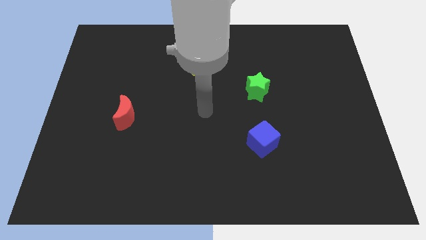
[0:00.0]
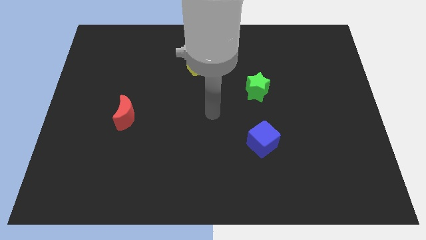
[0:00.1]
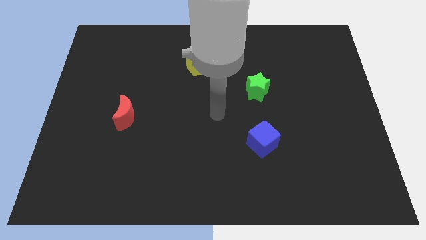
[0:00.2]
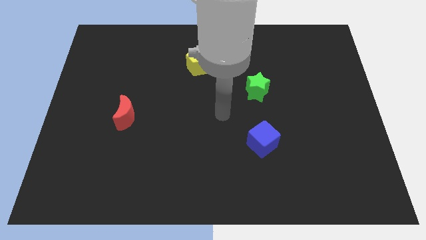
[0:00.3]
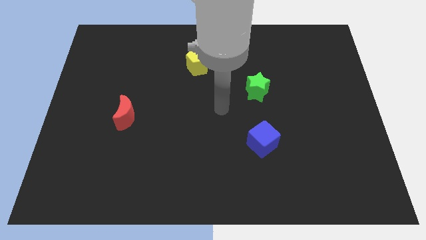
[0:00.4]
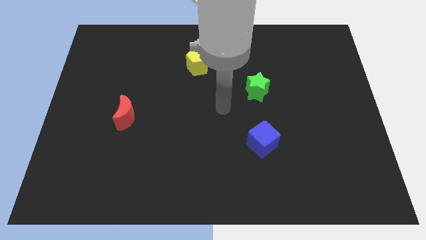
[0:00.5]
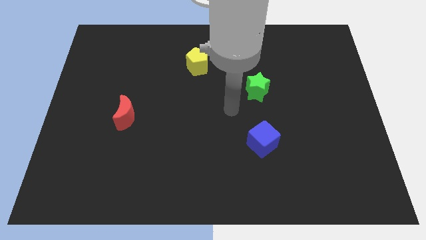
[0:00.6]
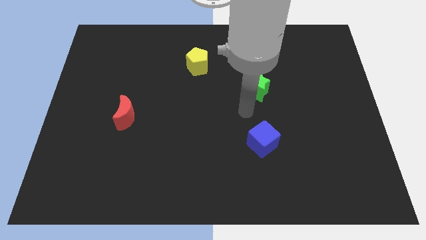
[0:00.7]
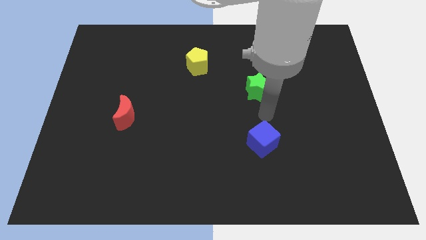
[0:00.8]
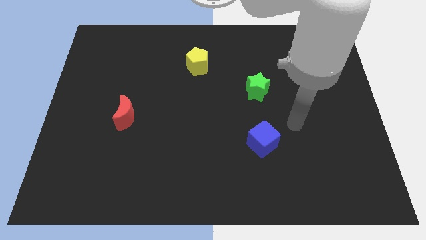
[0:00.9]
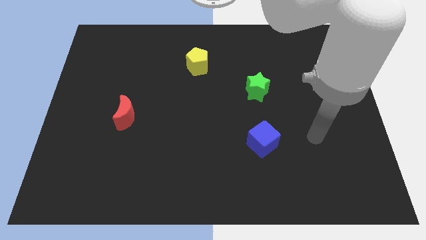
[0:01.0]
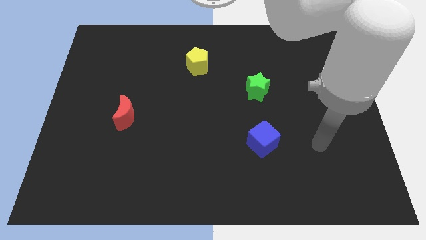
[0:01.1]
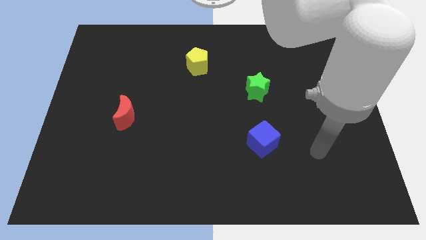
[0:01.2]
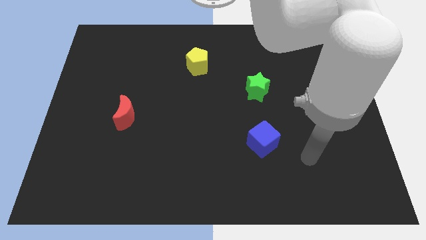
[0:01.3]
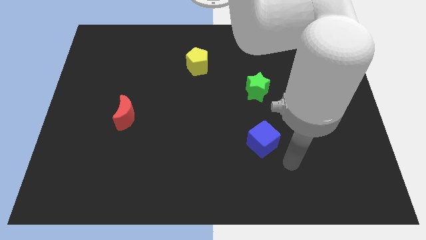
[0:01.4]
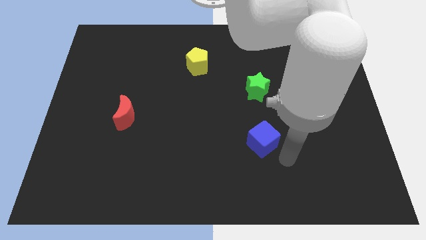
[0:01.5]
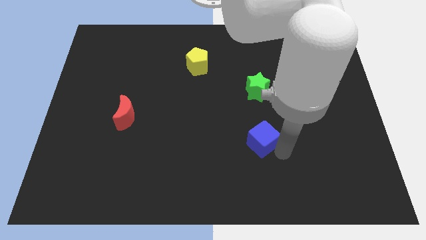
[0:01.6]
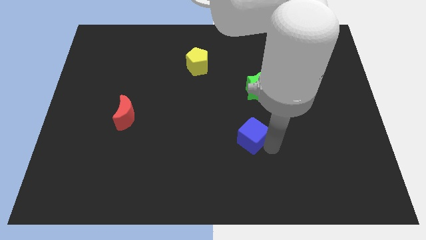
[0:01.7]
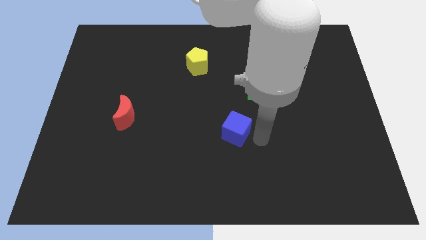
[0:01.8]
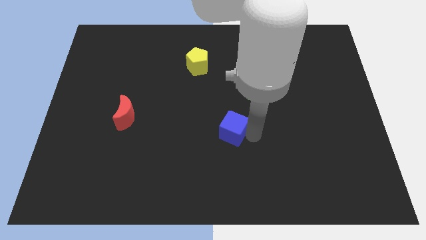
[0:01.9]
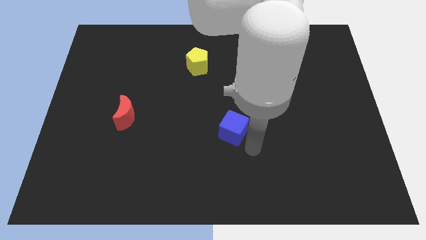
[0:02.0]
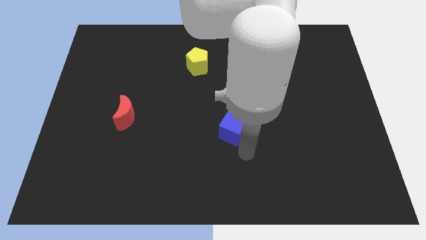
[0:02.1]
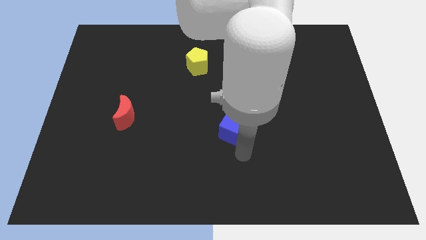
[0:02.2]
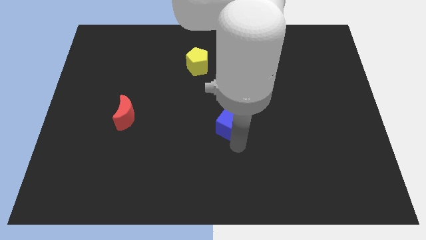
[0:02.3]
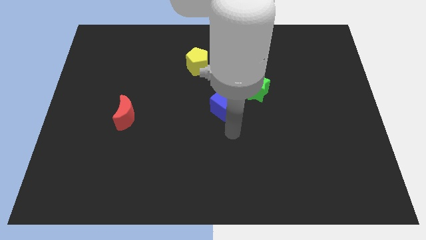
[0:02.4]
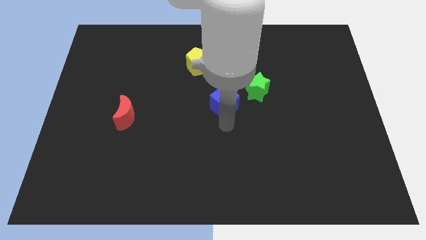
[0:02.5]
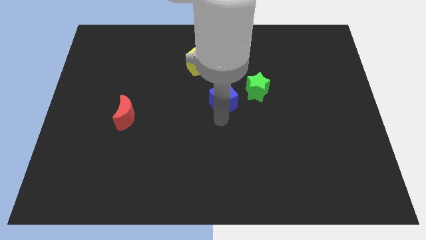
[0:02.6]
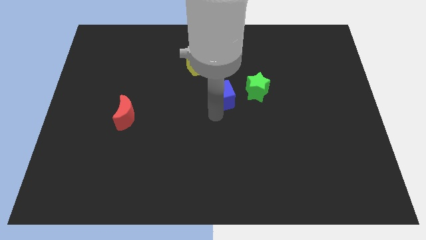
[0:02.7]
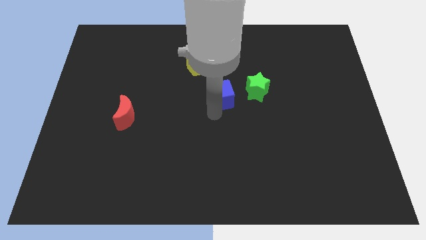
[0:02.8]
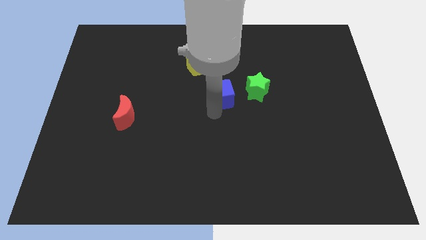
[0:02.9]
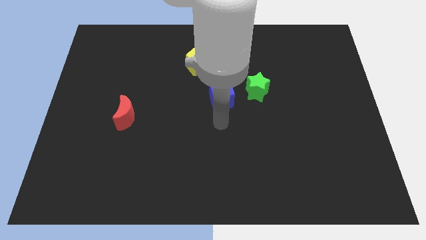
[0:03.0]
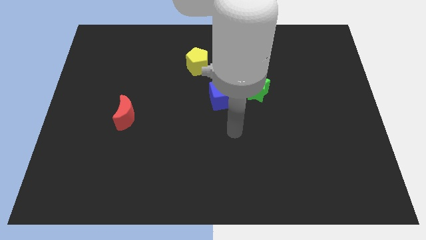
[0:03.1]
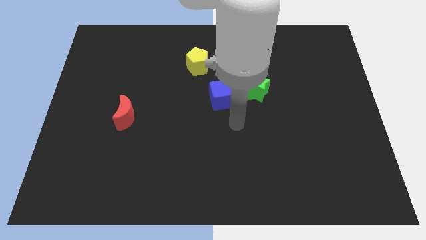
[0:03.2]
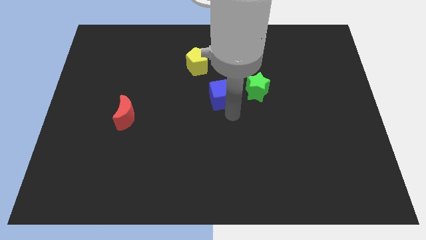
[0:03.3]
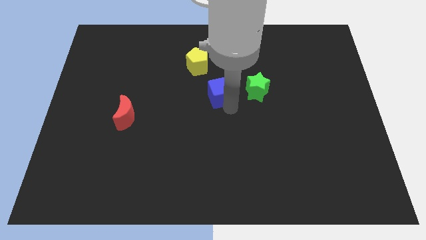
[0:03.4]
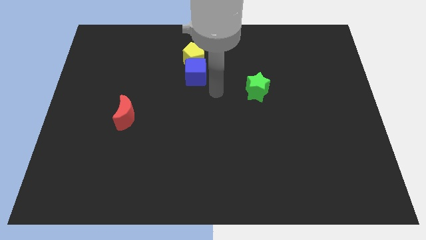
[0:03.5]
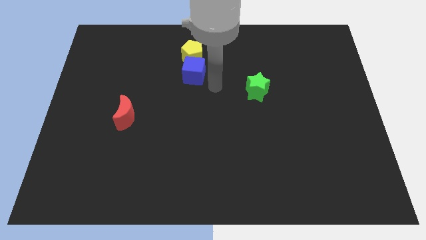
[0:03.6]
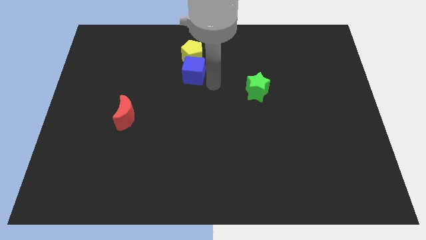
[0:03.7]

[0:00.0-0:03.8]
slide the cube to the pentagon

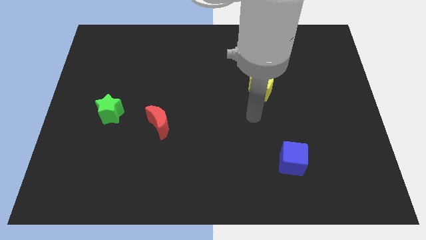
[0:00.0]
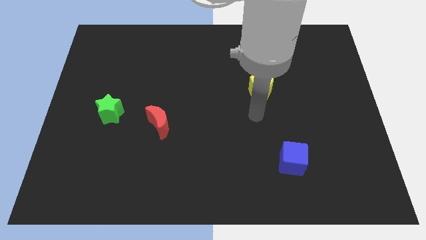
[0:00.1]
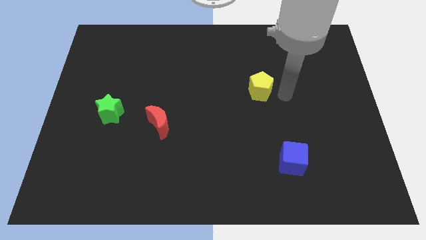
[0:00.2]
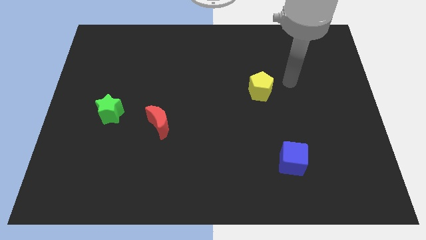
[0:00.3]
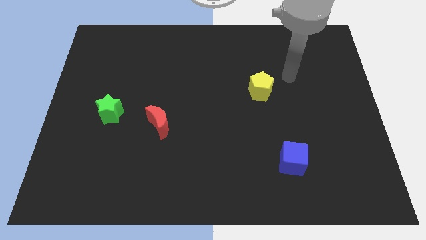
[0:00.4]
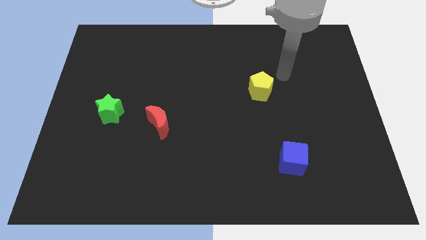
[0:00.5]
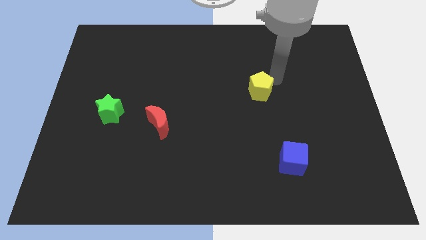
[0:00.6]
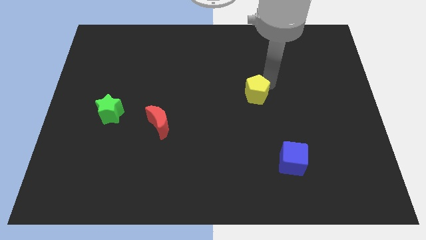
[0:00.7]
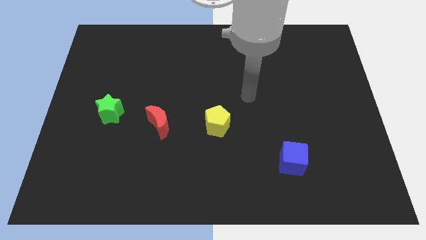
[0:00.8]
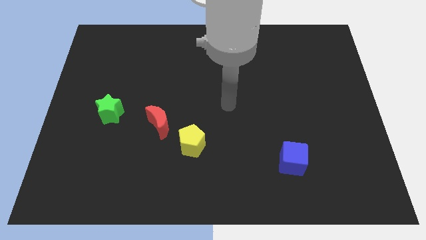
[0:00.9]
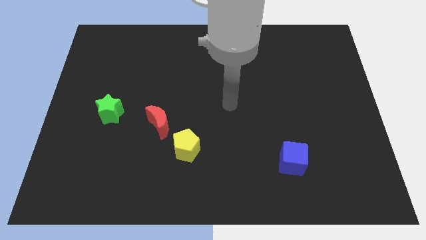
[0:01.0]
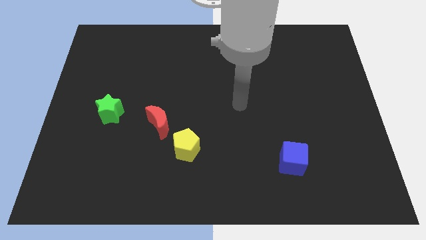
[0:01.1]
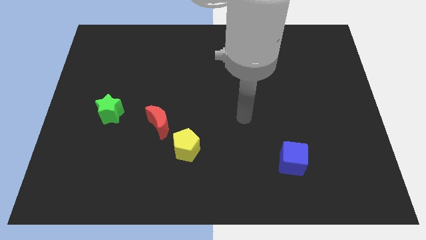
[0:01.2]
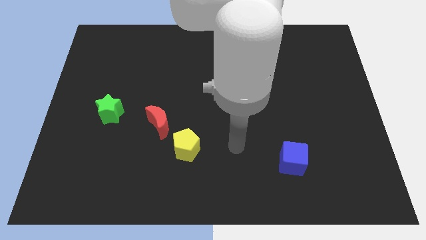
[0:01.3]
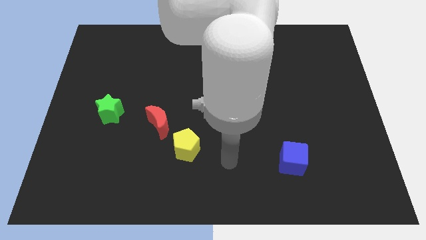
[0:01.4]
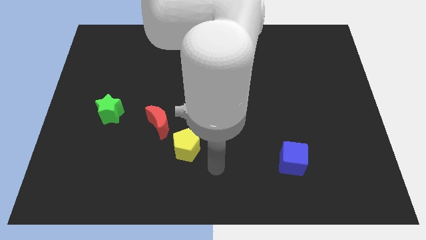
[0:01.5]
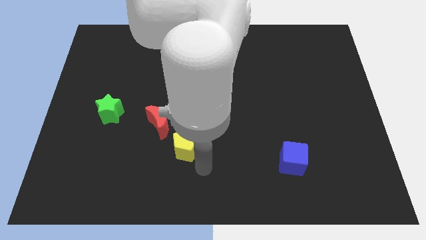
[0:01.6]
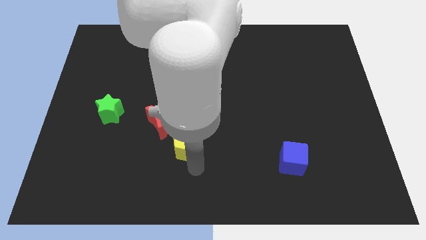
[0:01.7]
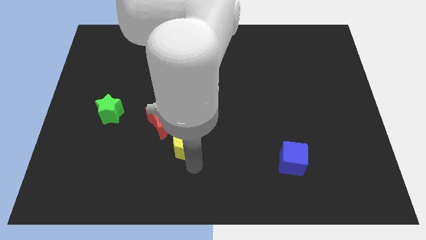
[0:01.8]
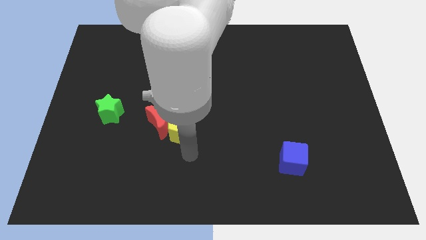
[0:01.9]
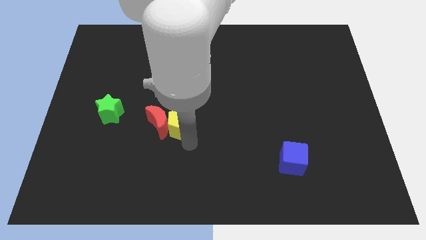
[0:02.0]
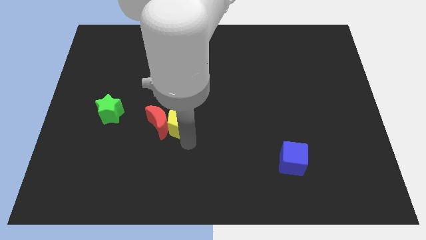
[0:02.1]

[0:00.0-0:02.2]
put the yellow pentagon to the red block

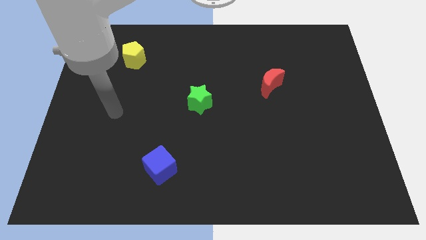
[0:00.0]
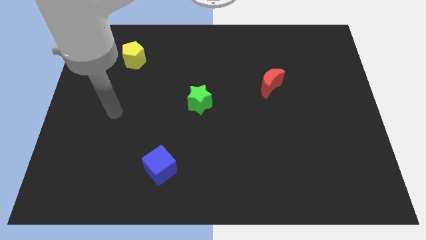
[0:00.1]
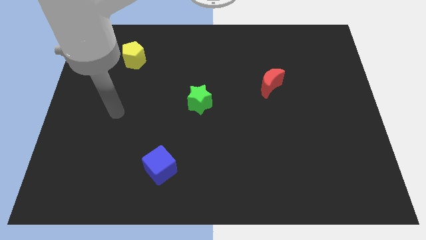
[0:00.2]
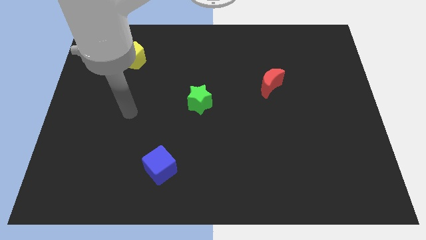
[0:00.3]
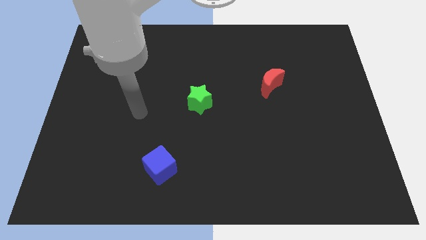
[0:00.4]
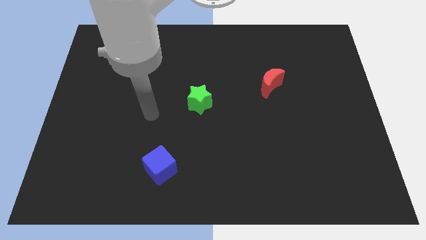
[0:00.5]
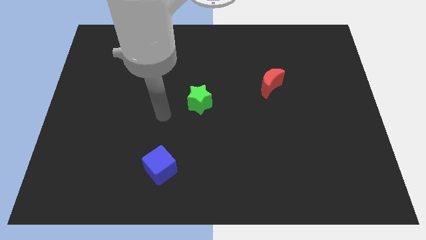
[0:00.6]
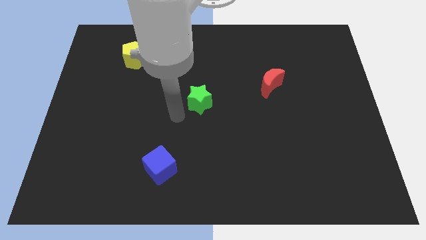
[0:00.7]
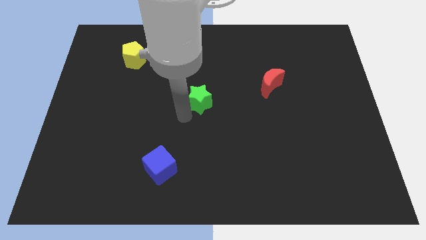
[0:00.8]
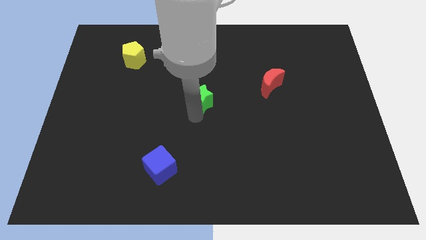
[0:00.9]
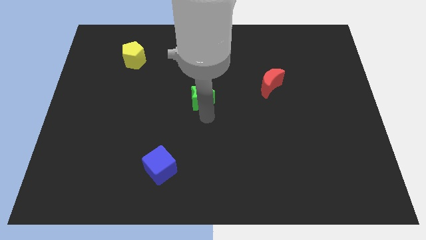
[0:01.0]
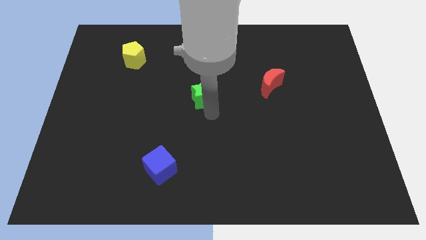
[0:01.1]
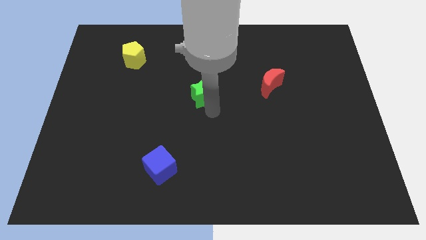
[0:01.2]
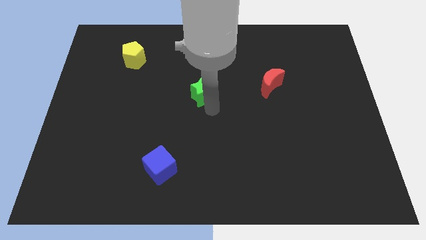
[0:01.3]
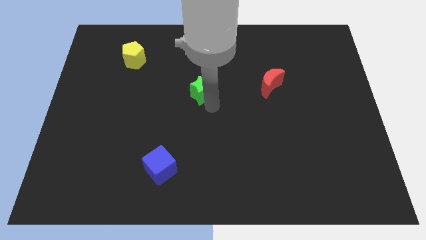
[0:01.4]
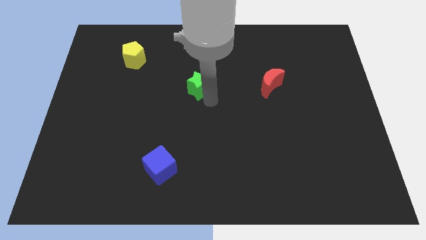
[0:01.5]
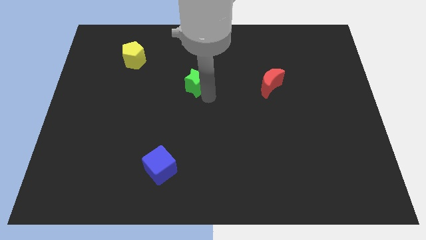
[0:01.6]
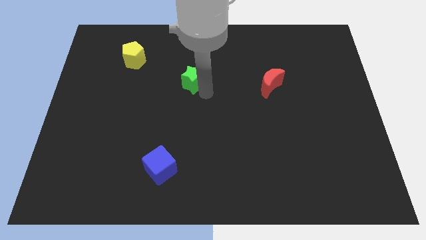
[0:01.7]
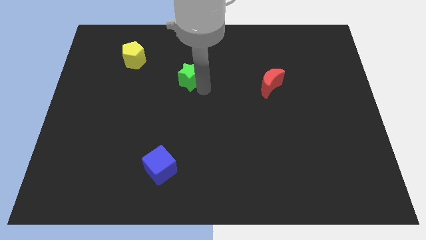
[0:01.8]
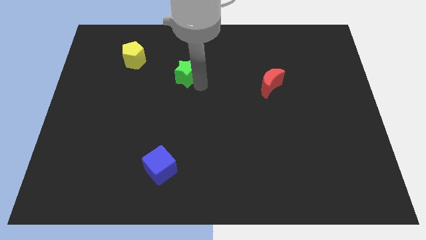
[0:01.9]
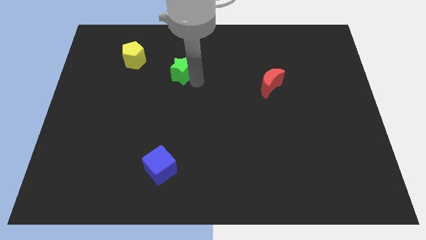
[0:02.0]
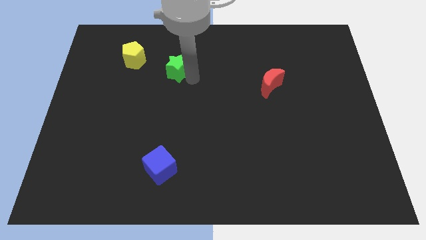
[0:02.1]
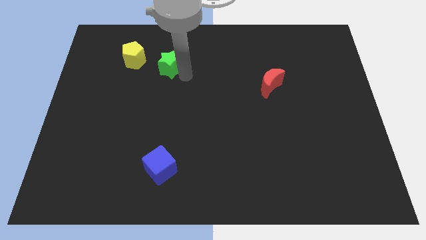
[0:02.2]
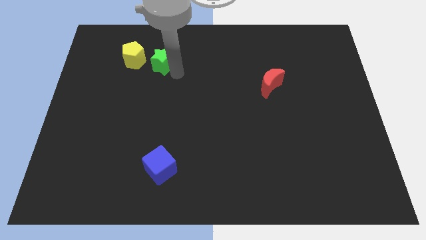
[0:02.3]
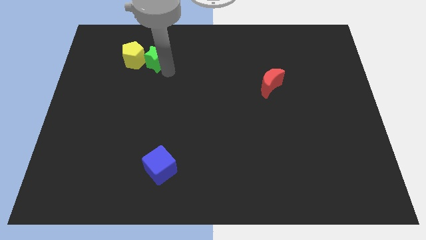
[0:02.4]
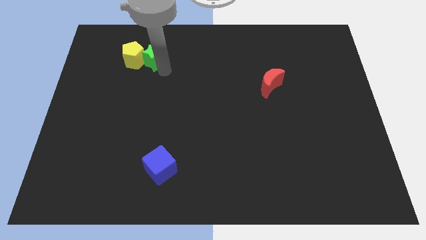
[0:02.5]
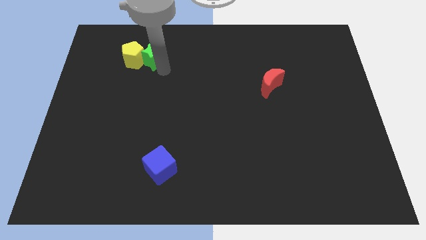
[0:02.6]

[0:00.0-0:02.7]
slide the star towards the pentagon
